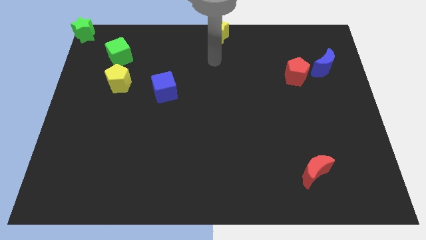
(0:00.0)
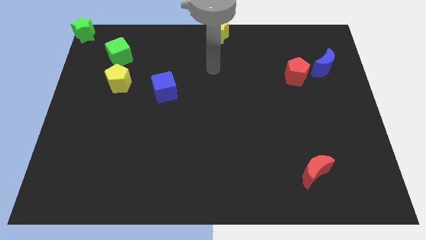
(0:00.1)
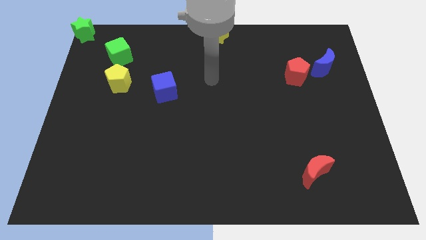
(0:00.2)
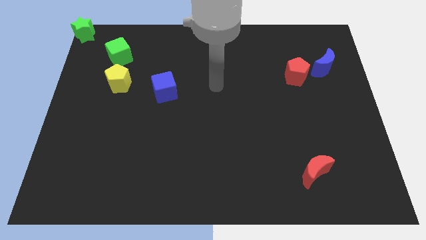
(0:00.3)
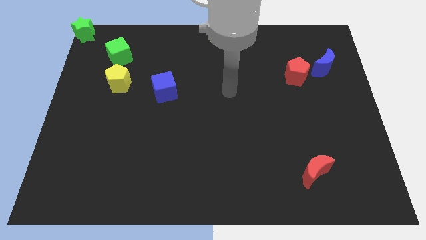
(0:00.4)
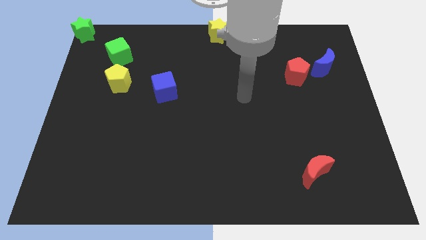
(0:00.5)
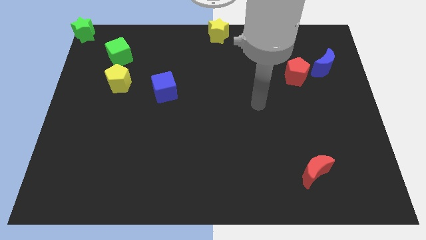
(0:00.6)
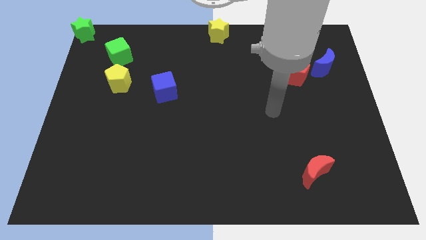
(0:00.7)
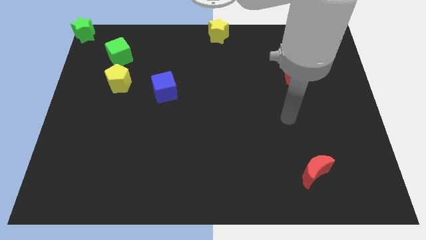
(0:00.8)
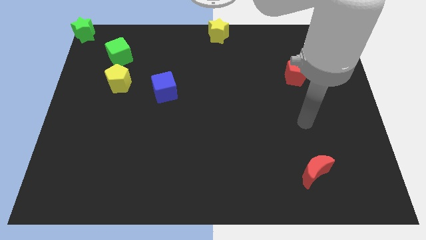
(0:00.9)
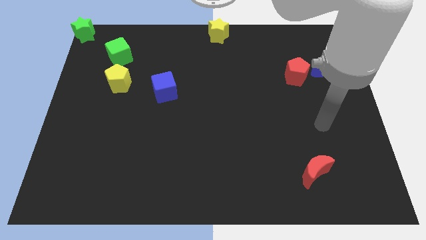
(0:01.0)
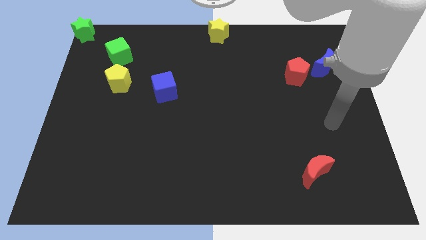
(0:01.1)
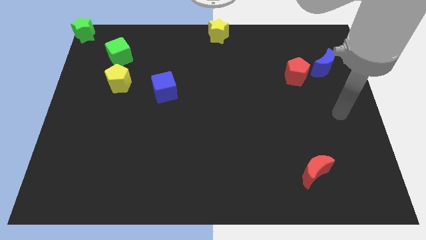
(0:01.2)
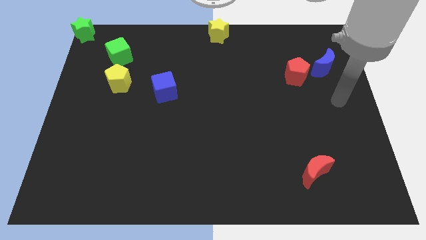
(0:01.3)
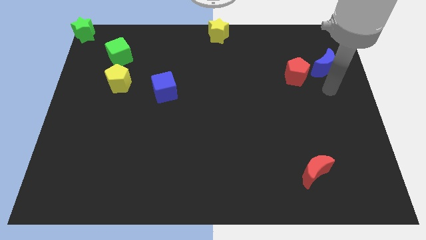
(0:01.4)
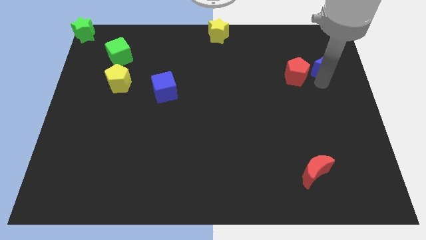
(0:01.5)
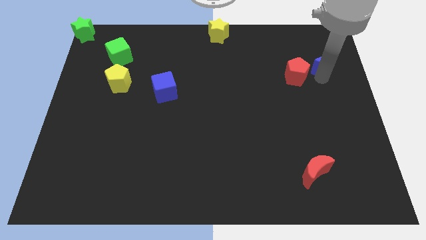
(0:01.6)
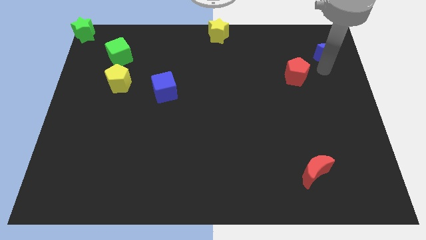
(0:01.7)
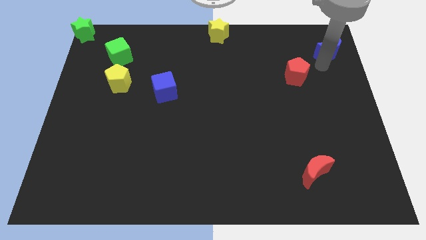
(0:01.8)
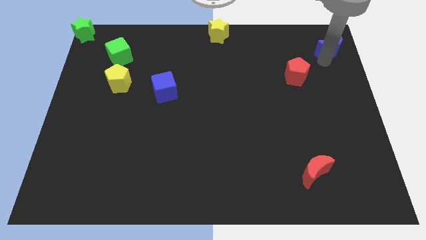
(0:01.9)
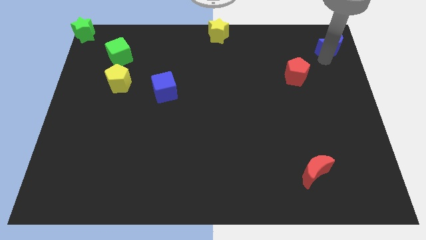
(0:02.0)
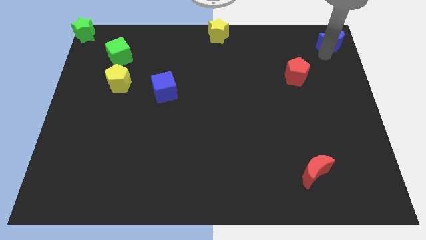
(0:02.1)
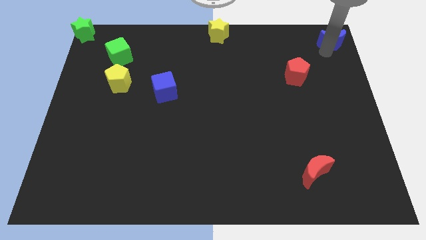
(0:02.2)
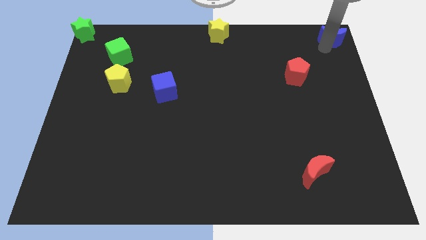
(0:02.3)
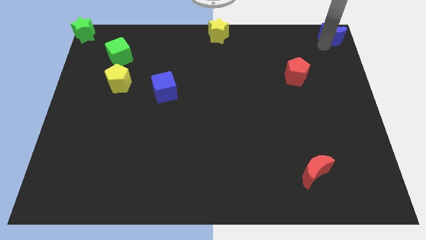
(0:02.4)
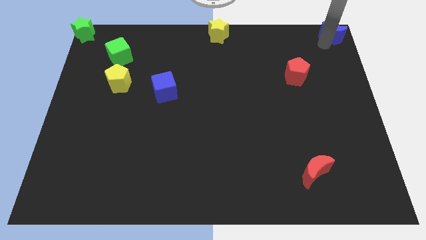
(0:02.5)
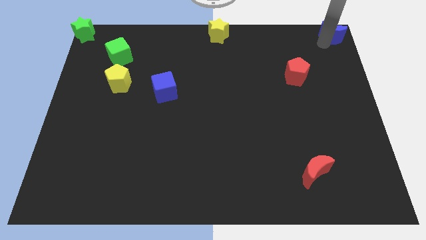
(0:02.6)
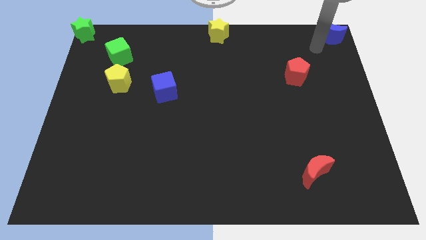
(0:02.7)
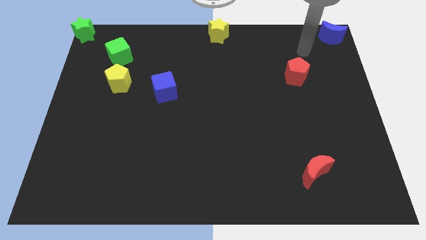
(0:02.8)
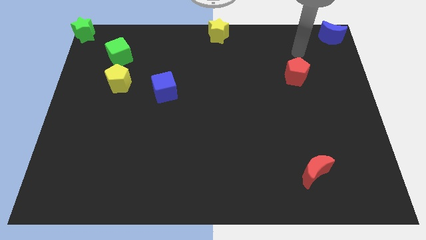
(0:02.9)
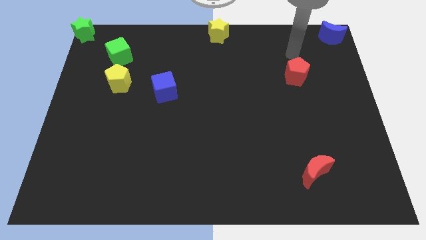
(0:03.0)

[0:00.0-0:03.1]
move blue moon to top right corner

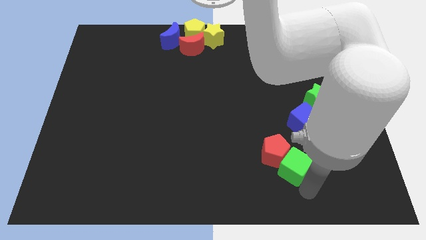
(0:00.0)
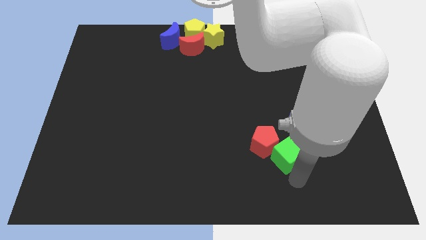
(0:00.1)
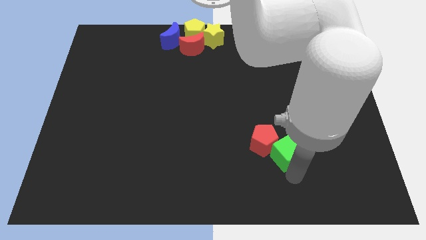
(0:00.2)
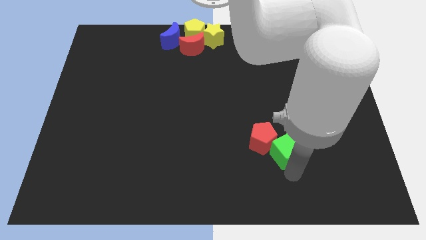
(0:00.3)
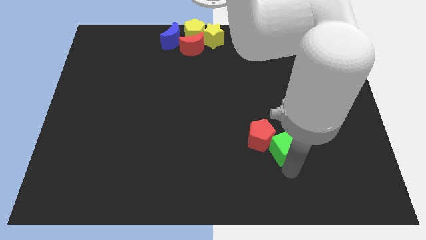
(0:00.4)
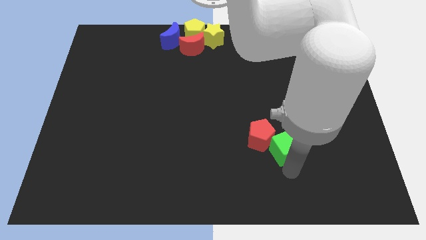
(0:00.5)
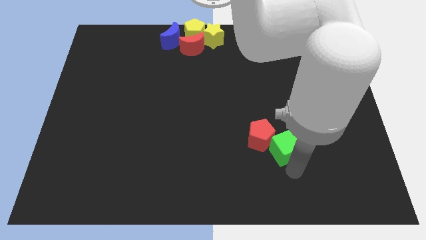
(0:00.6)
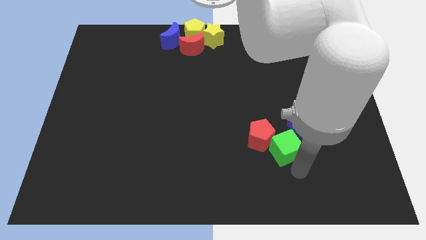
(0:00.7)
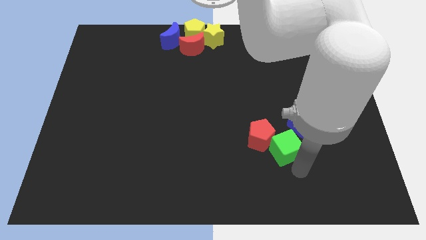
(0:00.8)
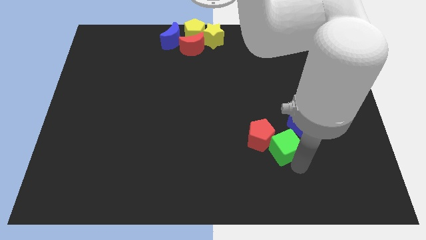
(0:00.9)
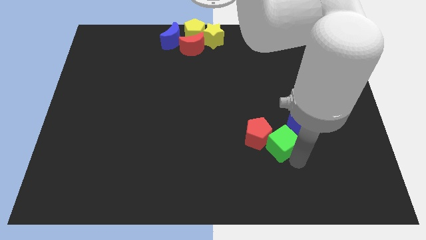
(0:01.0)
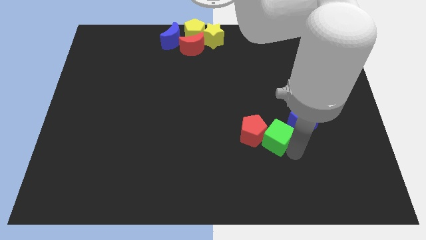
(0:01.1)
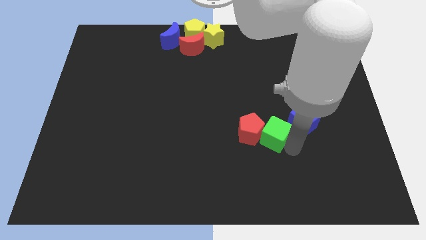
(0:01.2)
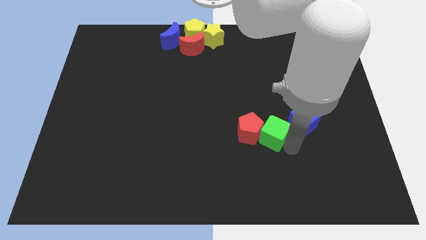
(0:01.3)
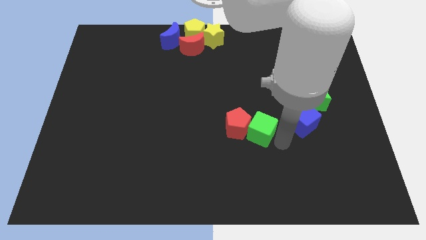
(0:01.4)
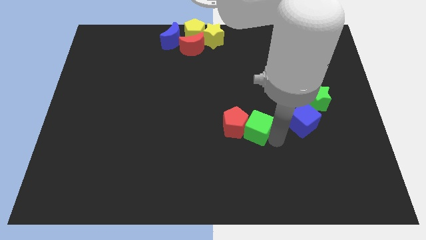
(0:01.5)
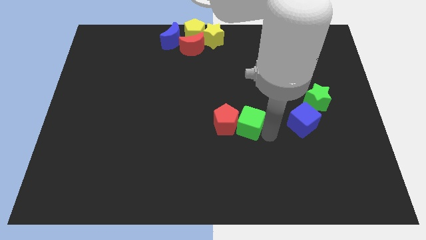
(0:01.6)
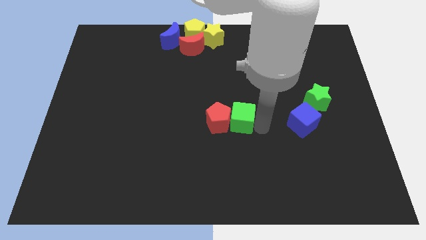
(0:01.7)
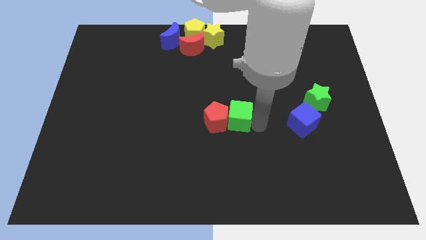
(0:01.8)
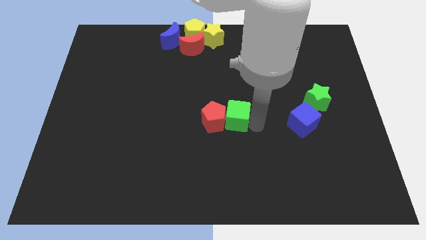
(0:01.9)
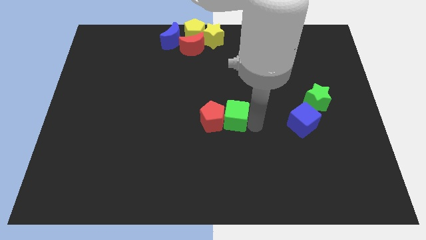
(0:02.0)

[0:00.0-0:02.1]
move green cube along with red pentagon towards middle of the board

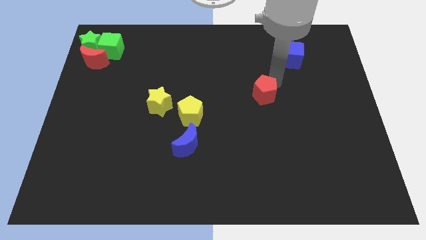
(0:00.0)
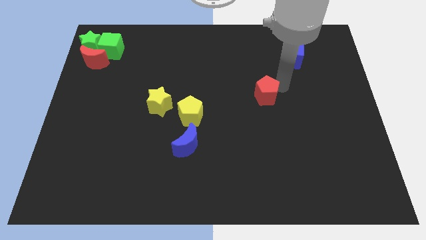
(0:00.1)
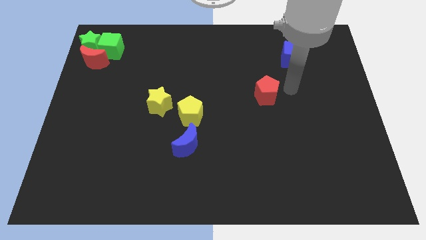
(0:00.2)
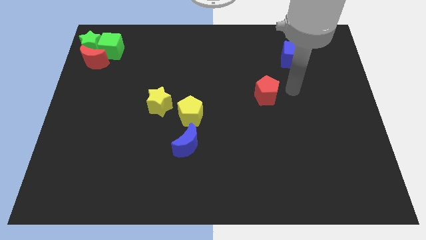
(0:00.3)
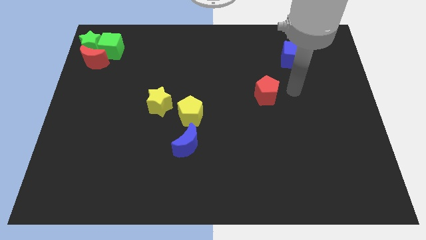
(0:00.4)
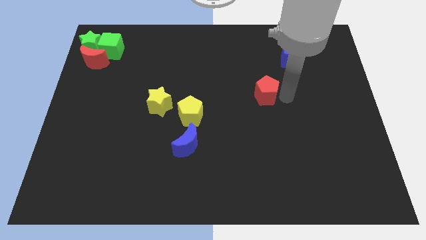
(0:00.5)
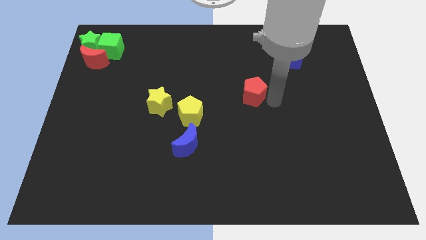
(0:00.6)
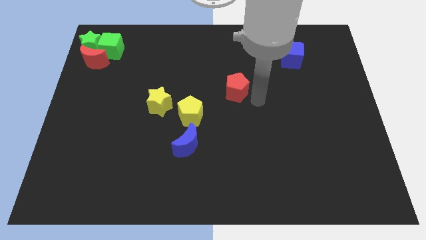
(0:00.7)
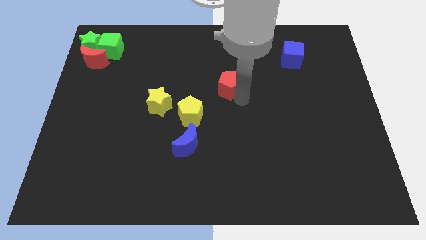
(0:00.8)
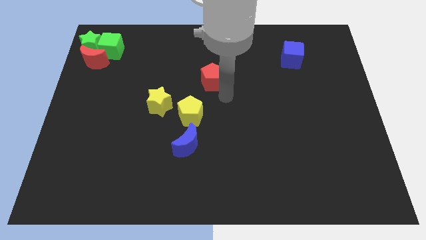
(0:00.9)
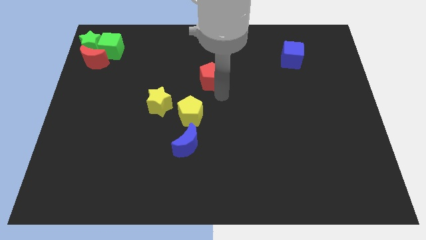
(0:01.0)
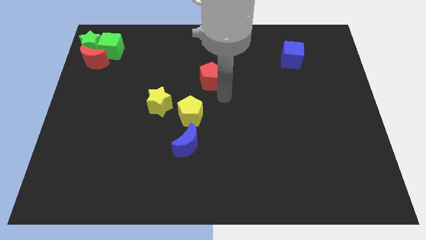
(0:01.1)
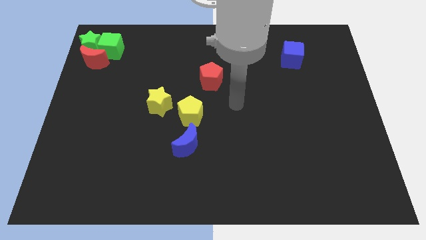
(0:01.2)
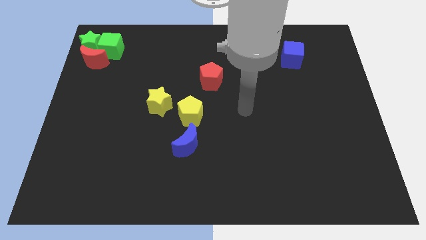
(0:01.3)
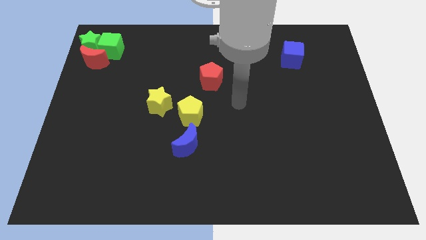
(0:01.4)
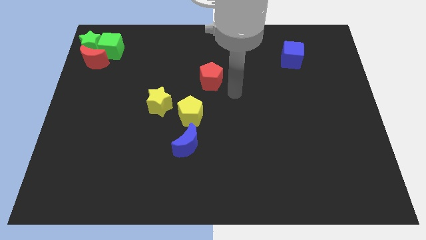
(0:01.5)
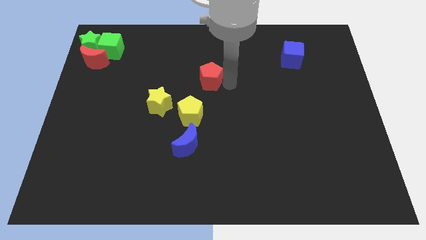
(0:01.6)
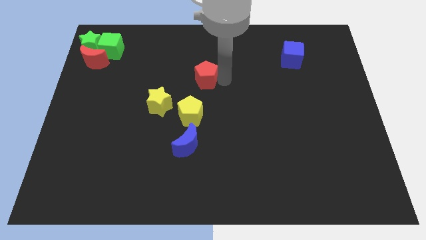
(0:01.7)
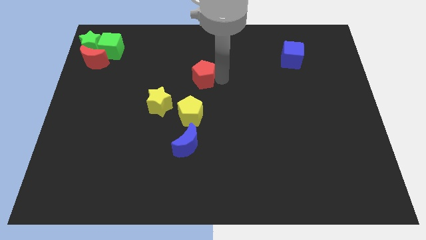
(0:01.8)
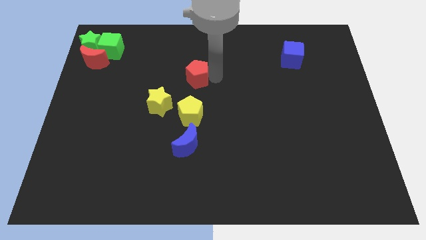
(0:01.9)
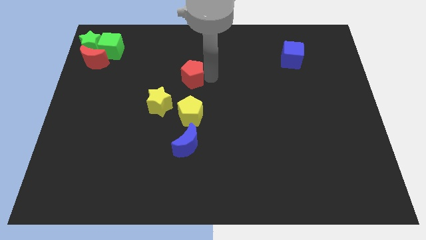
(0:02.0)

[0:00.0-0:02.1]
drag the red pentagon into the center

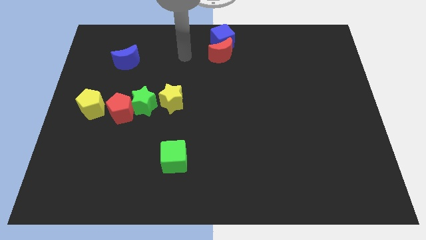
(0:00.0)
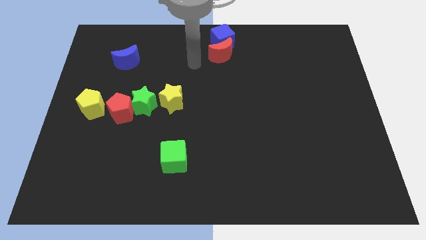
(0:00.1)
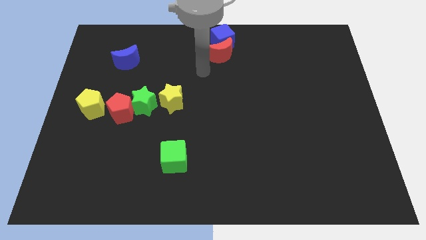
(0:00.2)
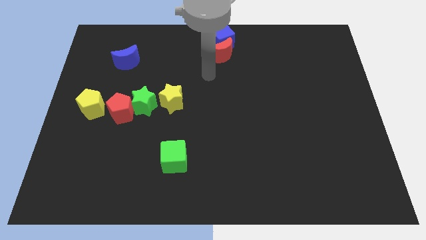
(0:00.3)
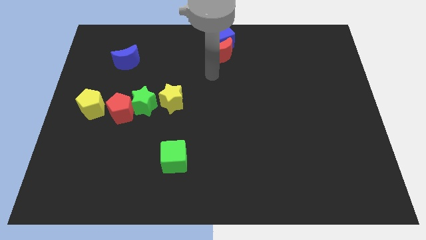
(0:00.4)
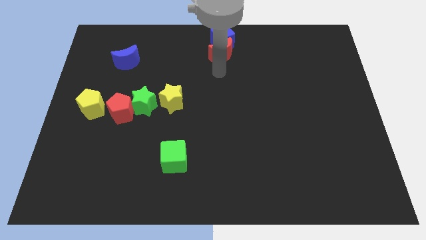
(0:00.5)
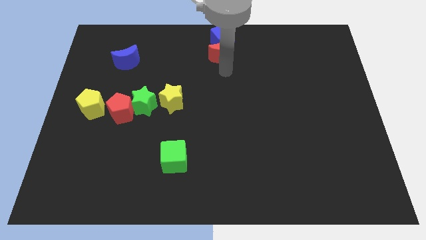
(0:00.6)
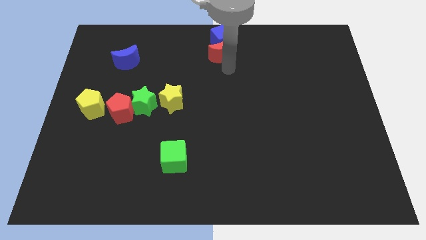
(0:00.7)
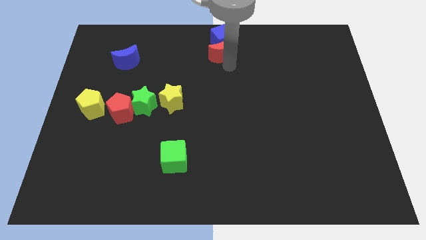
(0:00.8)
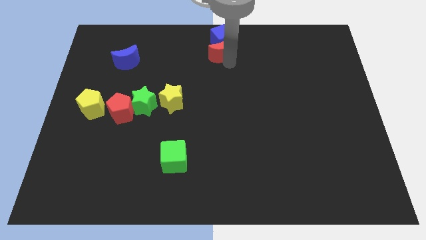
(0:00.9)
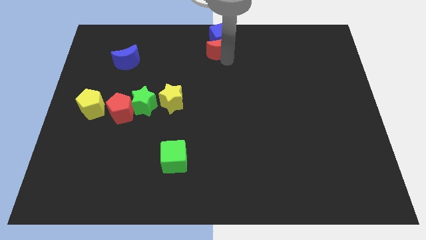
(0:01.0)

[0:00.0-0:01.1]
move red moon along with blue cube to center top

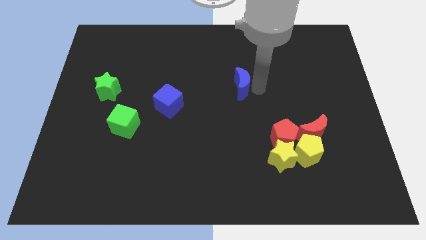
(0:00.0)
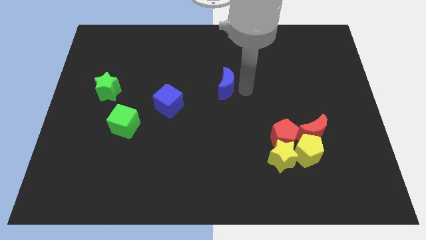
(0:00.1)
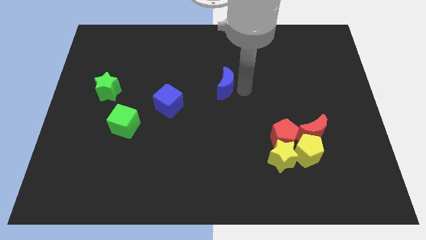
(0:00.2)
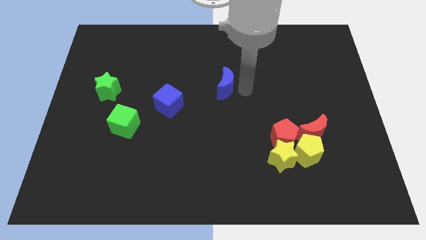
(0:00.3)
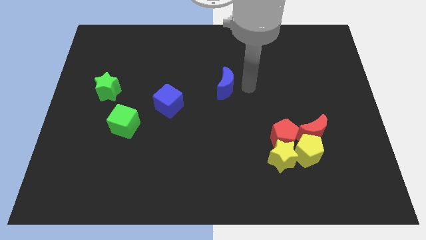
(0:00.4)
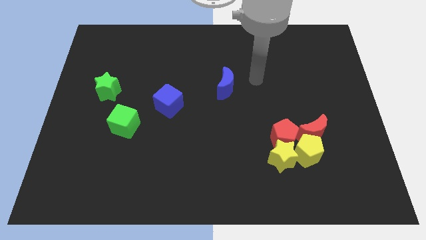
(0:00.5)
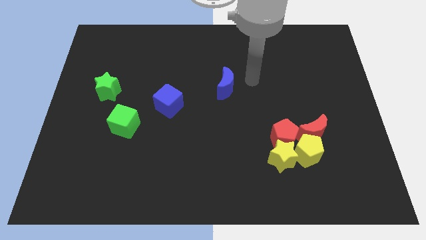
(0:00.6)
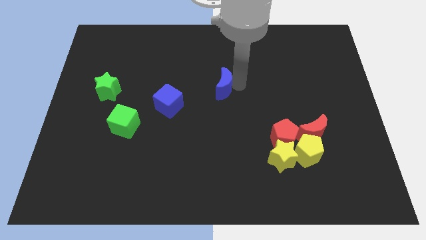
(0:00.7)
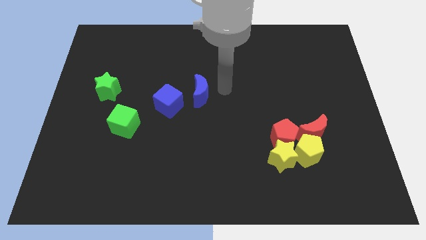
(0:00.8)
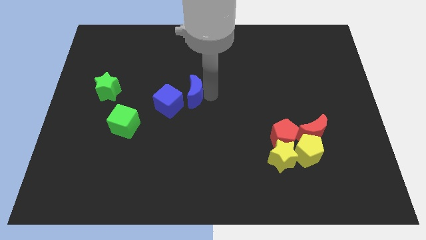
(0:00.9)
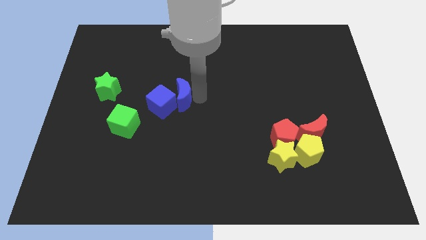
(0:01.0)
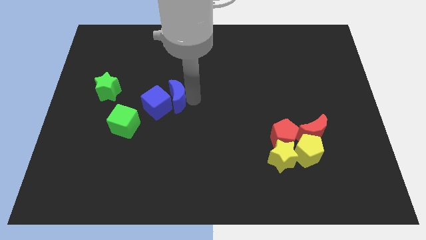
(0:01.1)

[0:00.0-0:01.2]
push the blue moon into the blue cube
